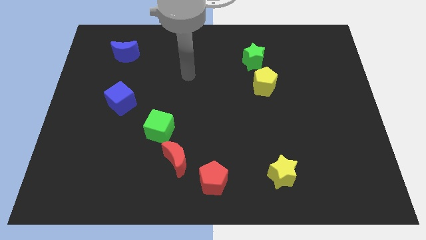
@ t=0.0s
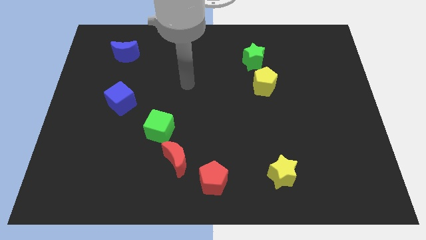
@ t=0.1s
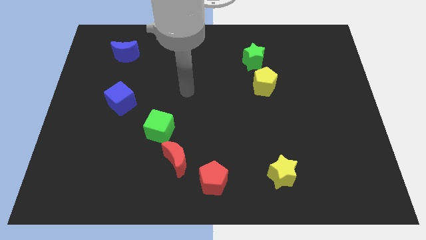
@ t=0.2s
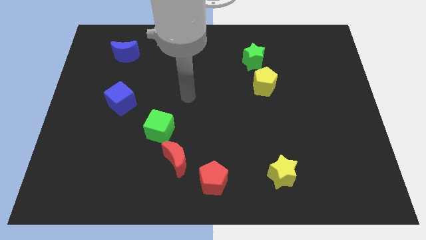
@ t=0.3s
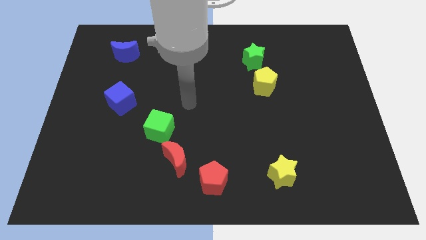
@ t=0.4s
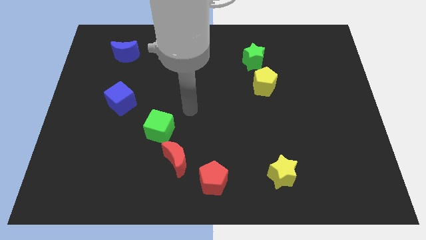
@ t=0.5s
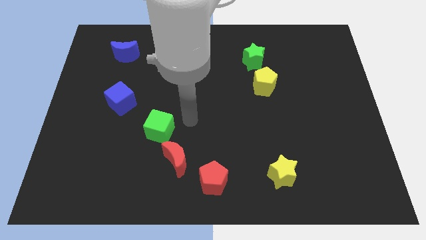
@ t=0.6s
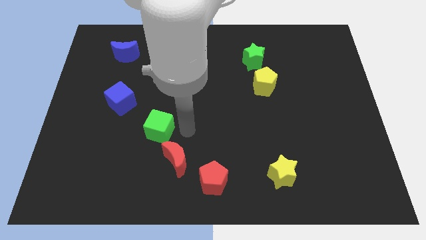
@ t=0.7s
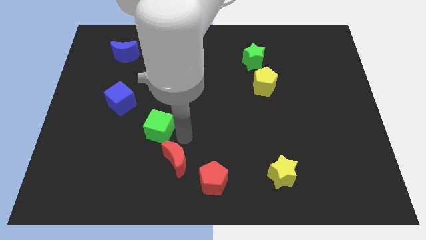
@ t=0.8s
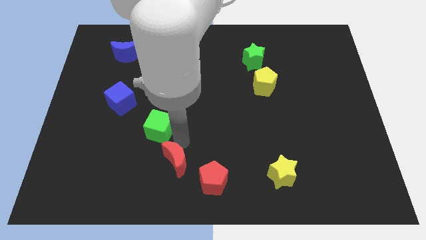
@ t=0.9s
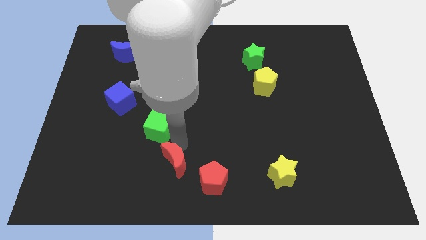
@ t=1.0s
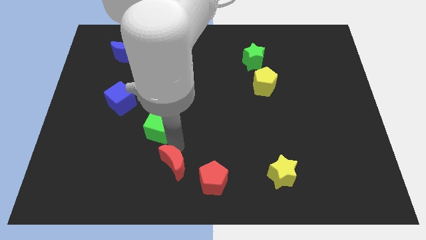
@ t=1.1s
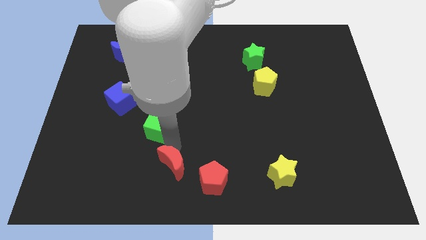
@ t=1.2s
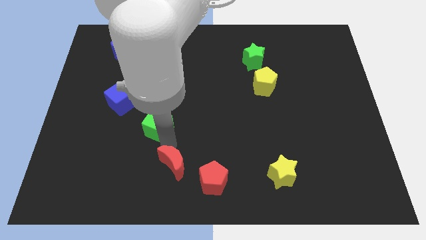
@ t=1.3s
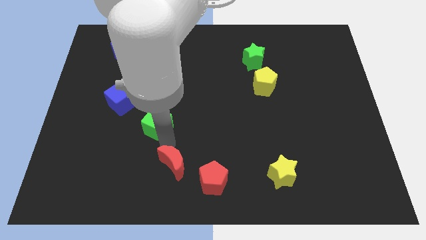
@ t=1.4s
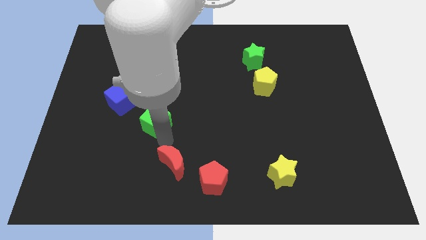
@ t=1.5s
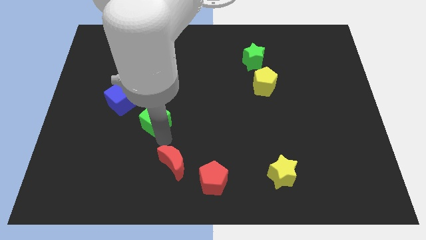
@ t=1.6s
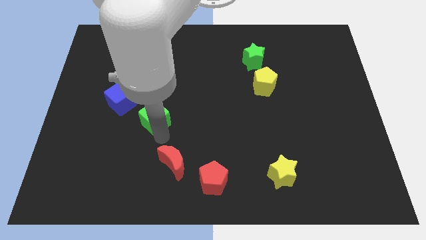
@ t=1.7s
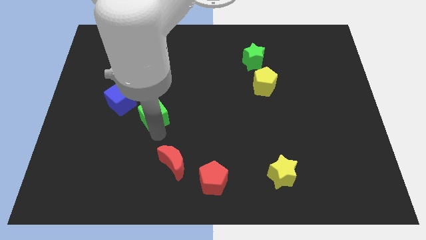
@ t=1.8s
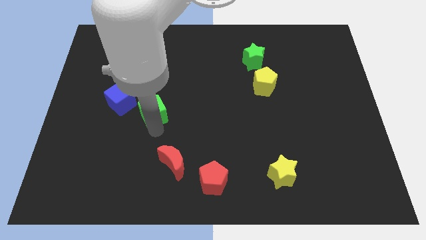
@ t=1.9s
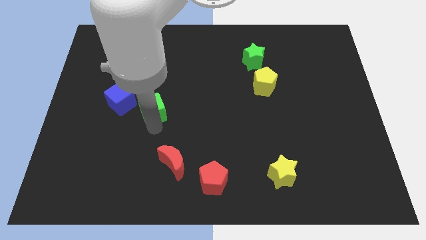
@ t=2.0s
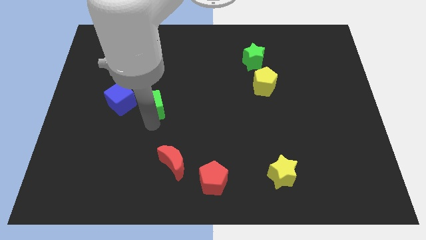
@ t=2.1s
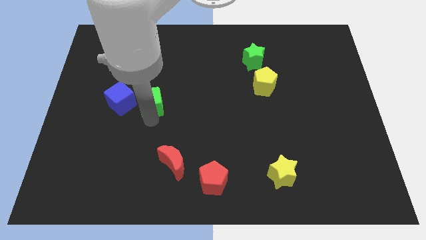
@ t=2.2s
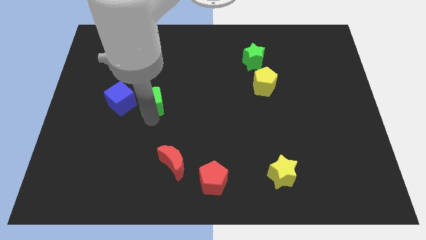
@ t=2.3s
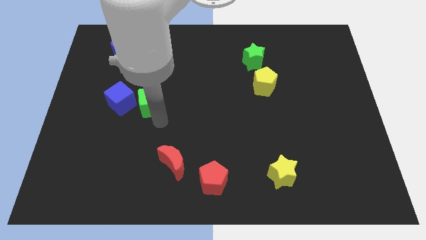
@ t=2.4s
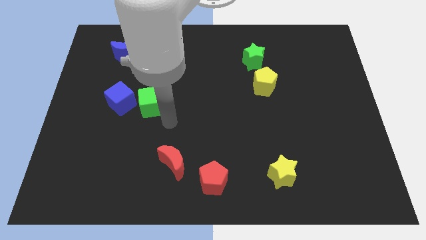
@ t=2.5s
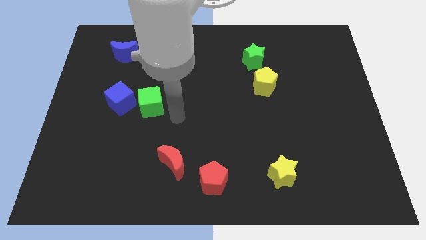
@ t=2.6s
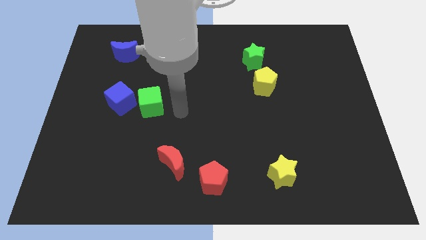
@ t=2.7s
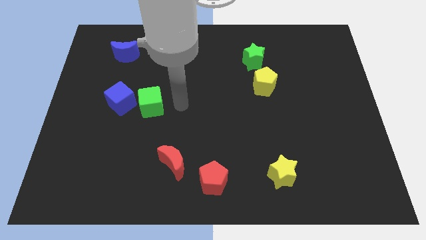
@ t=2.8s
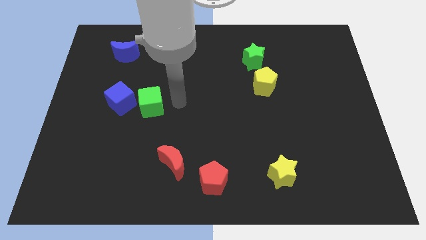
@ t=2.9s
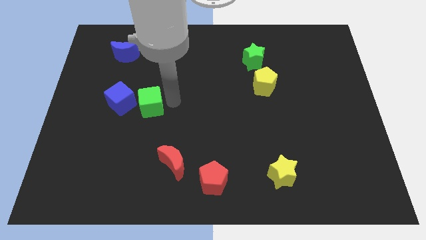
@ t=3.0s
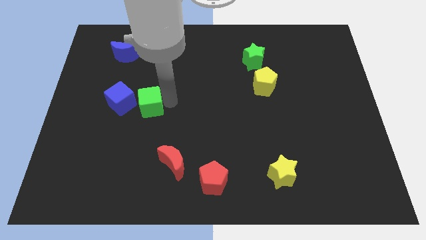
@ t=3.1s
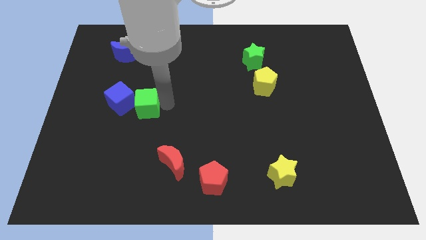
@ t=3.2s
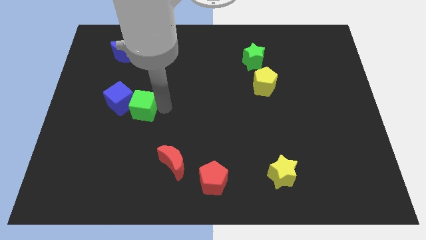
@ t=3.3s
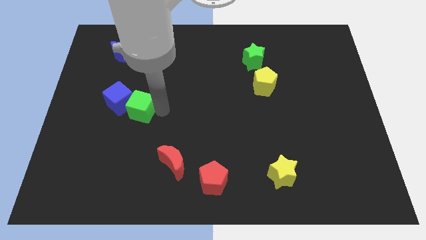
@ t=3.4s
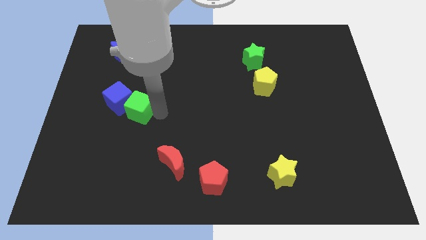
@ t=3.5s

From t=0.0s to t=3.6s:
push the green cube towards the blue cube

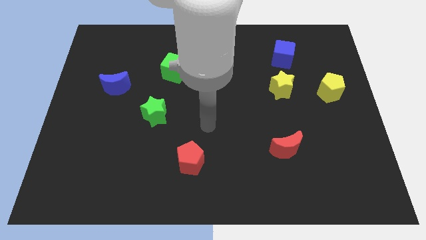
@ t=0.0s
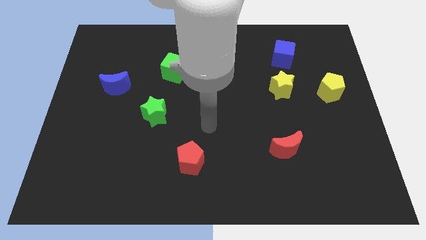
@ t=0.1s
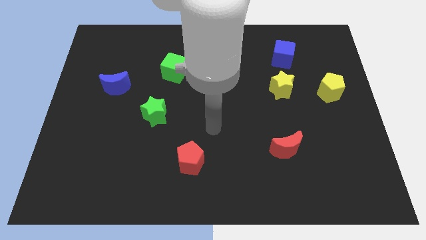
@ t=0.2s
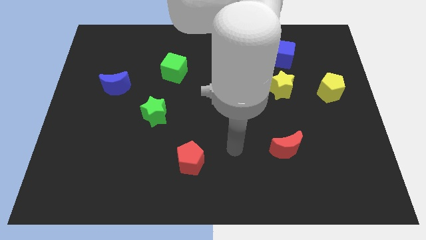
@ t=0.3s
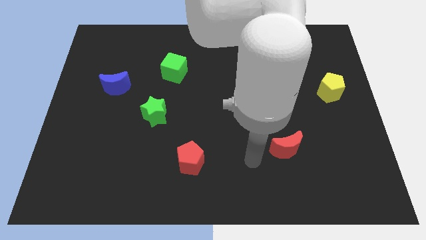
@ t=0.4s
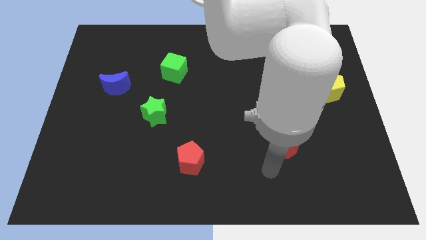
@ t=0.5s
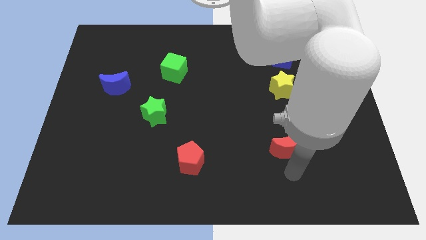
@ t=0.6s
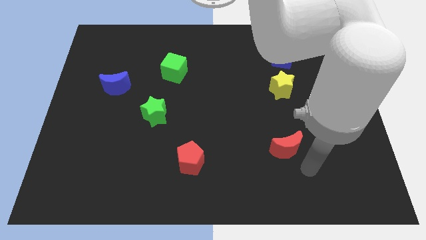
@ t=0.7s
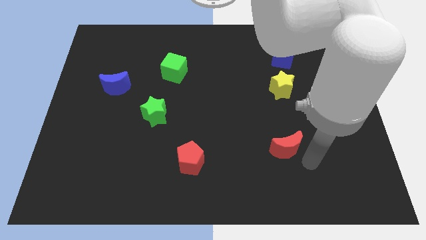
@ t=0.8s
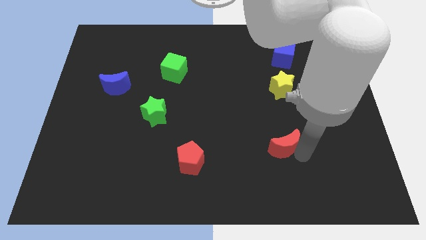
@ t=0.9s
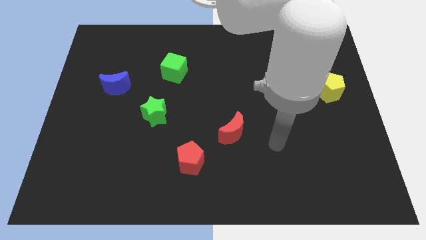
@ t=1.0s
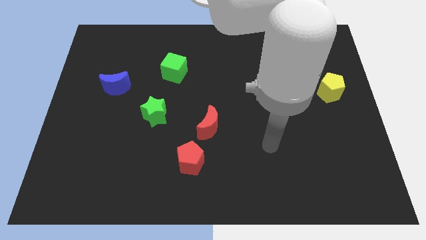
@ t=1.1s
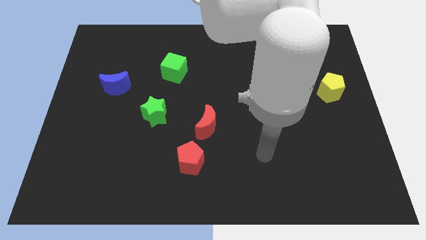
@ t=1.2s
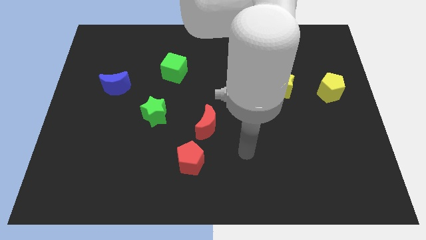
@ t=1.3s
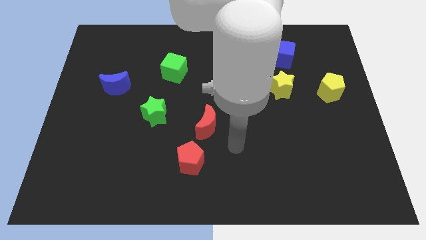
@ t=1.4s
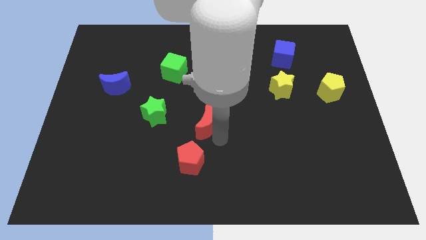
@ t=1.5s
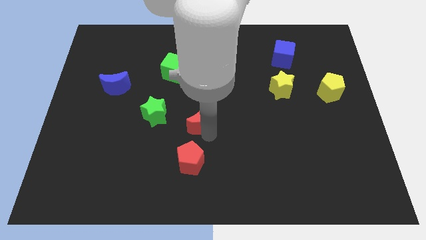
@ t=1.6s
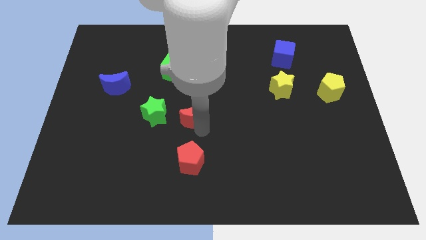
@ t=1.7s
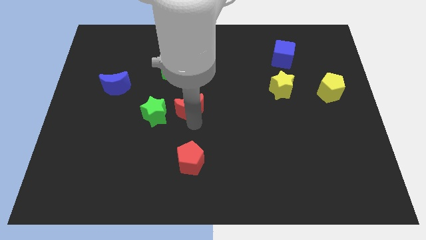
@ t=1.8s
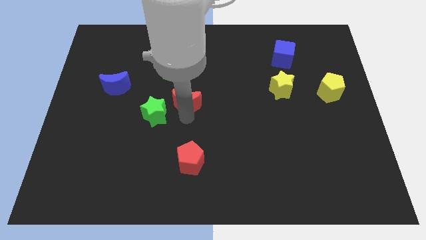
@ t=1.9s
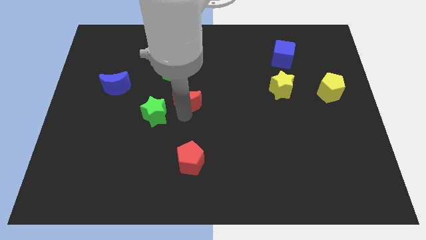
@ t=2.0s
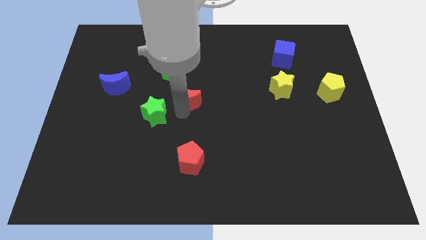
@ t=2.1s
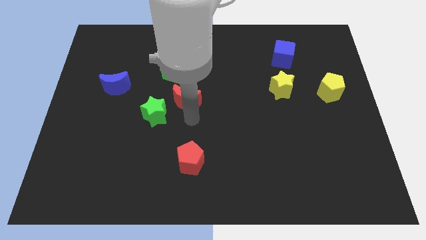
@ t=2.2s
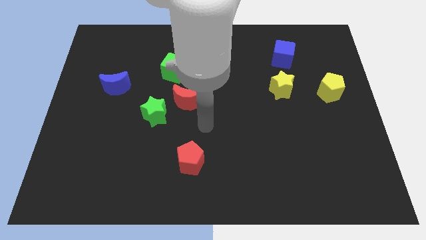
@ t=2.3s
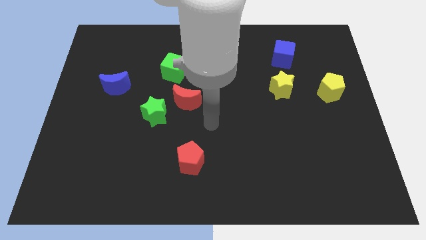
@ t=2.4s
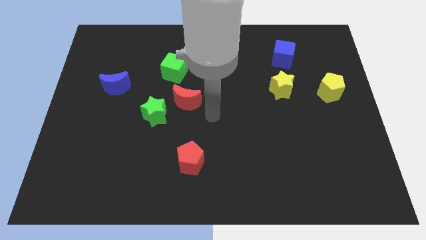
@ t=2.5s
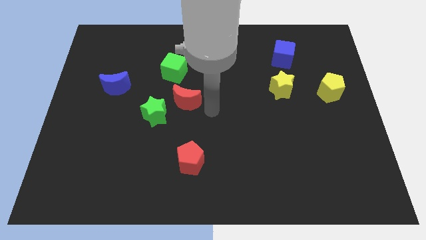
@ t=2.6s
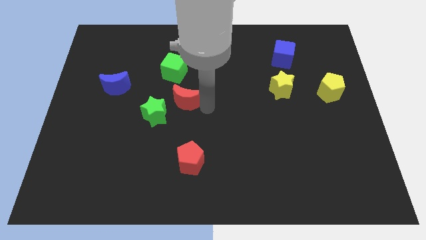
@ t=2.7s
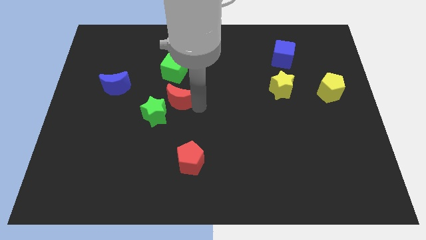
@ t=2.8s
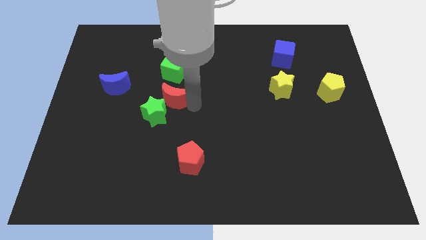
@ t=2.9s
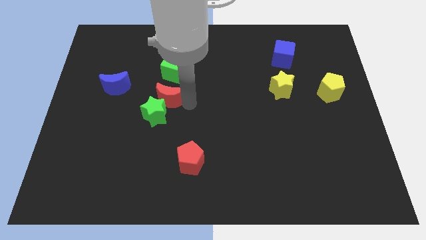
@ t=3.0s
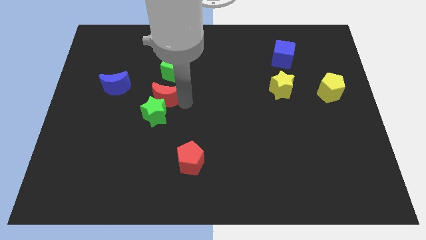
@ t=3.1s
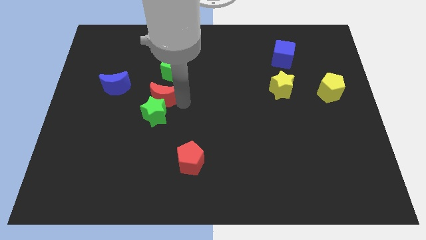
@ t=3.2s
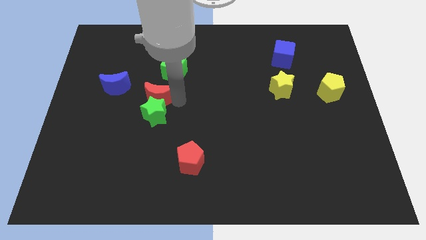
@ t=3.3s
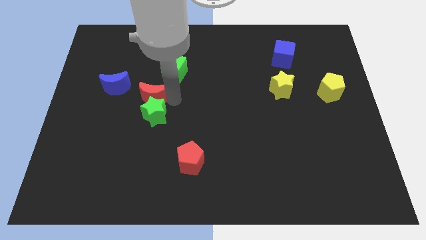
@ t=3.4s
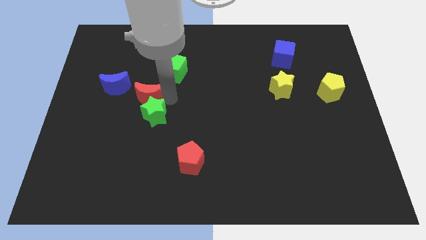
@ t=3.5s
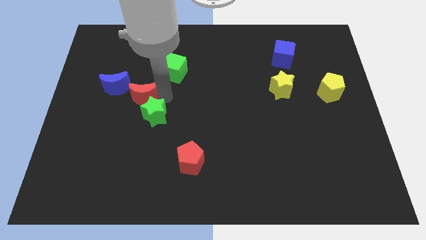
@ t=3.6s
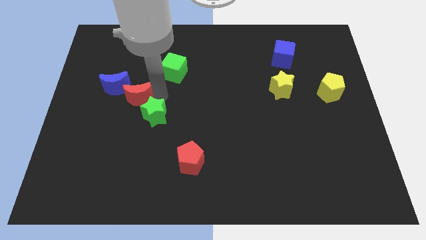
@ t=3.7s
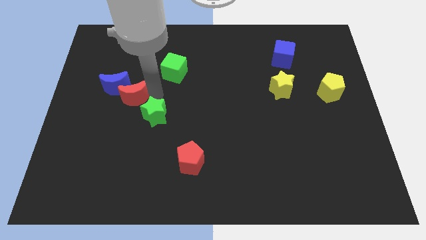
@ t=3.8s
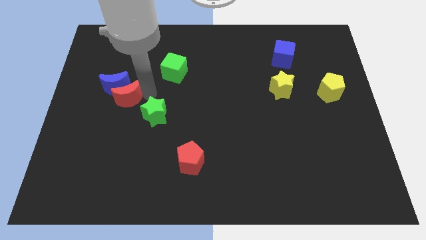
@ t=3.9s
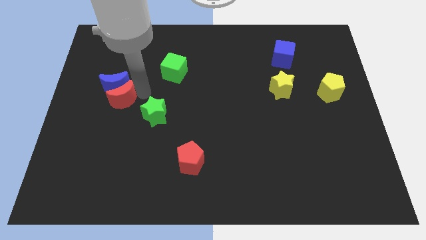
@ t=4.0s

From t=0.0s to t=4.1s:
move the red moon to the blue moon
